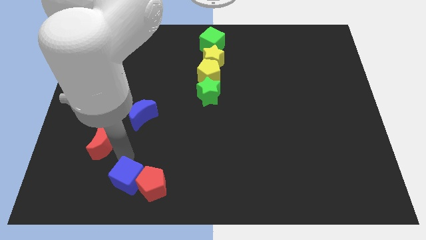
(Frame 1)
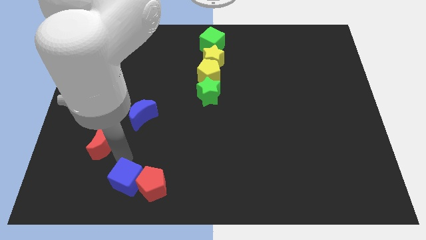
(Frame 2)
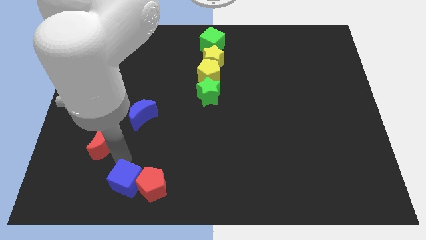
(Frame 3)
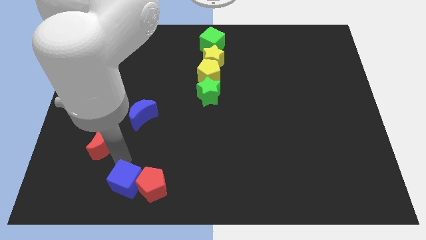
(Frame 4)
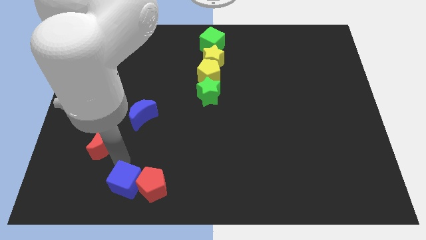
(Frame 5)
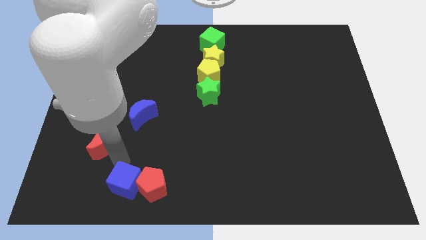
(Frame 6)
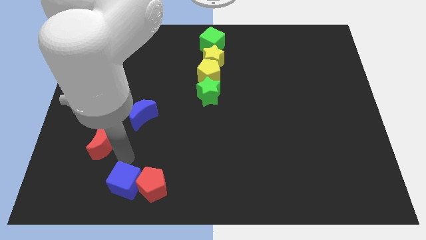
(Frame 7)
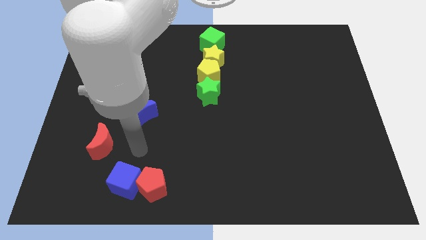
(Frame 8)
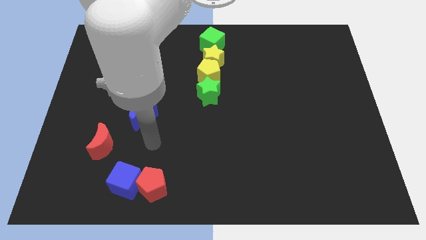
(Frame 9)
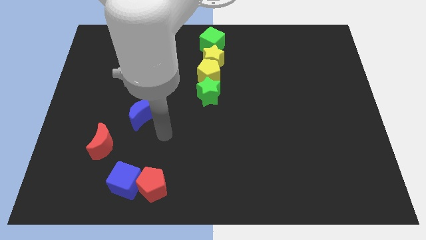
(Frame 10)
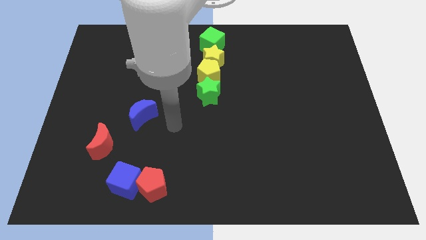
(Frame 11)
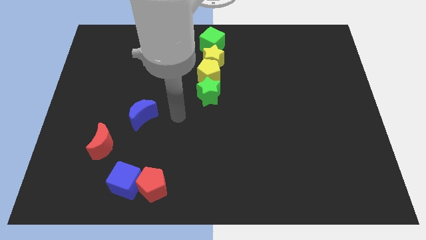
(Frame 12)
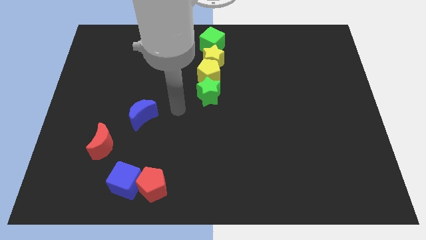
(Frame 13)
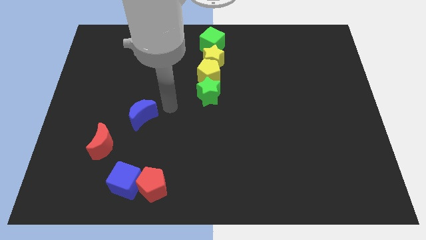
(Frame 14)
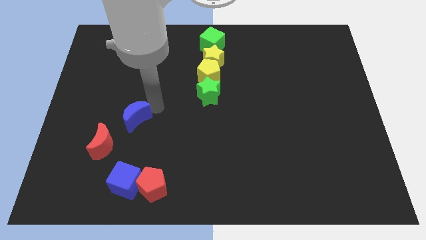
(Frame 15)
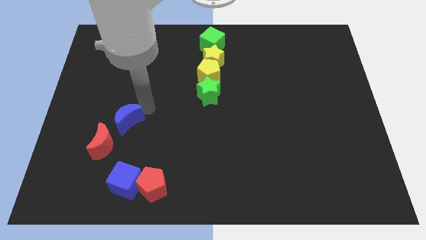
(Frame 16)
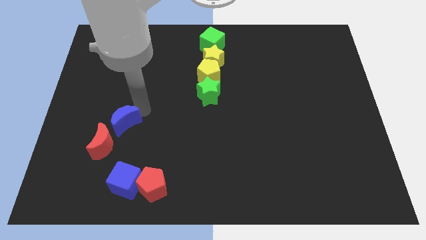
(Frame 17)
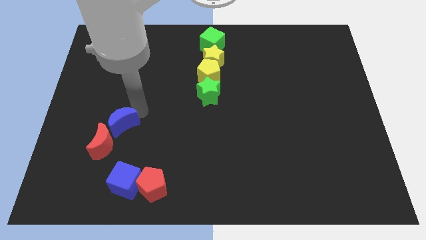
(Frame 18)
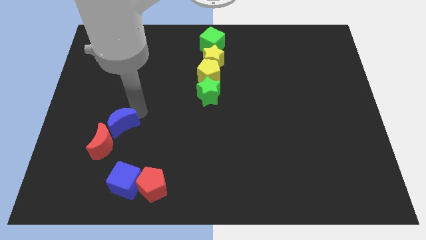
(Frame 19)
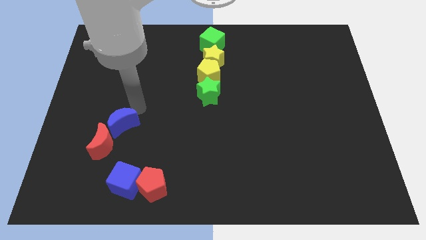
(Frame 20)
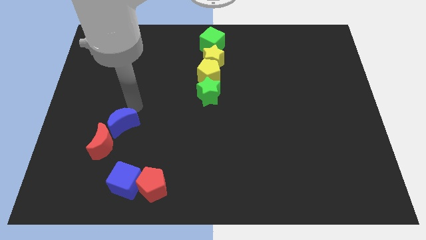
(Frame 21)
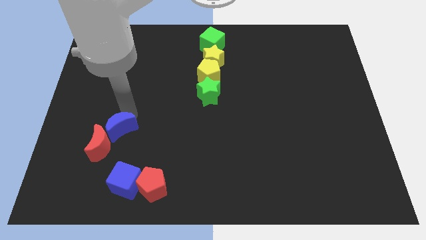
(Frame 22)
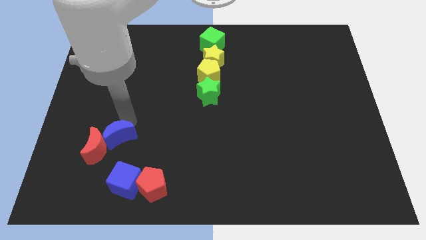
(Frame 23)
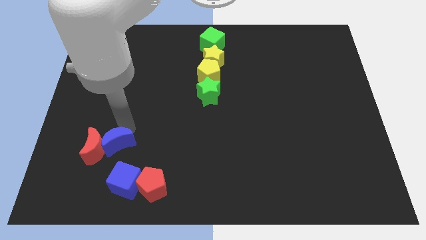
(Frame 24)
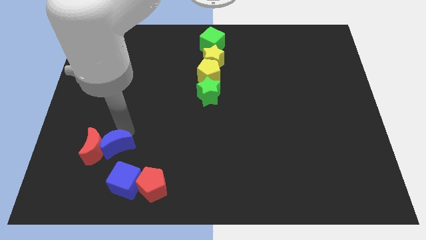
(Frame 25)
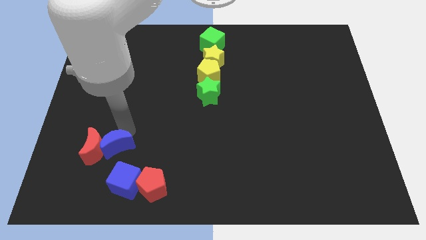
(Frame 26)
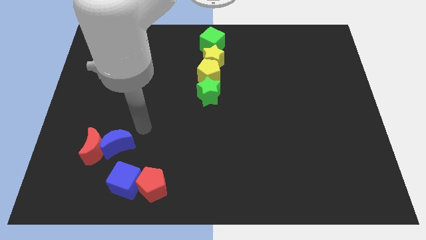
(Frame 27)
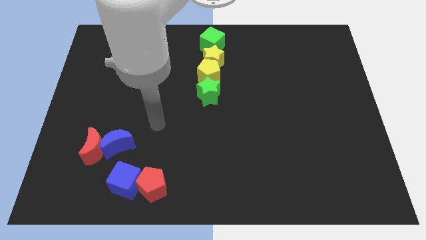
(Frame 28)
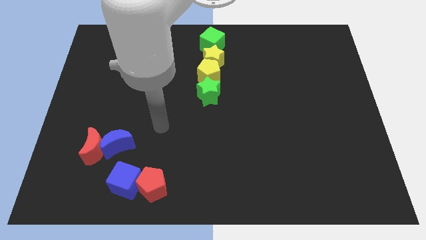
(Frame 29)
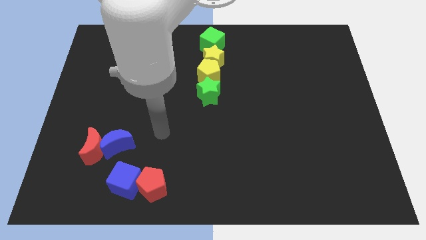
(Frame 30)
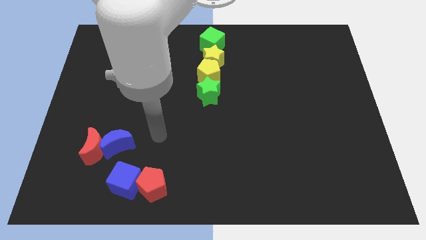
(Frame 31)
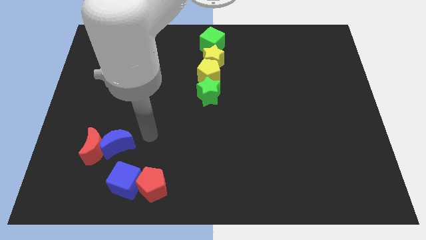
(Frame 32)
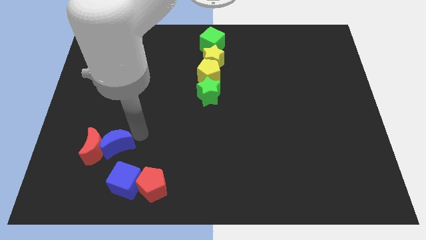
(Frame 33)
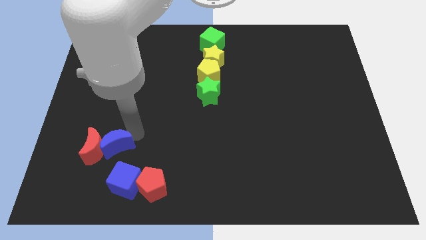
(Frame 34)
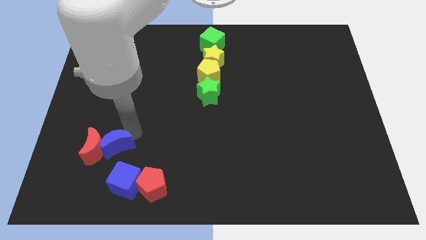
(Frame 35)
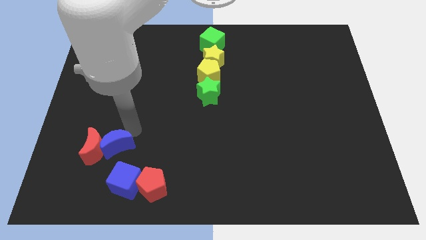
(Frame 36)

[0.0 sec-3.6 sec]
slightly move the blue cube and push the blue crescent close to the red crescent

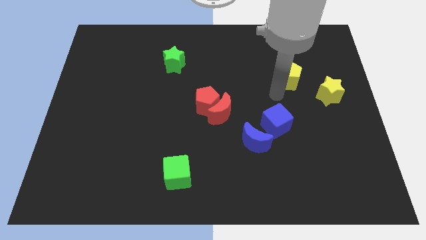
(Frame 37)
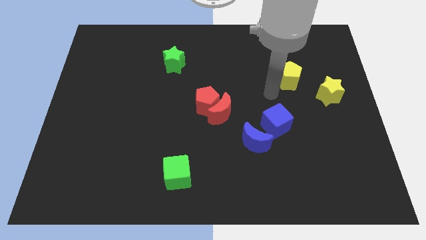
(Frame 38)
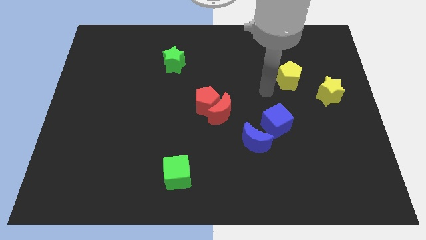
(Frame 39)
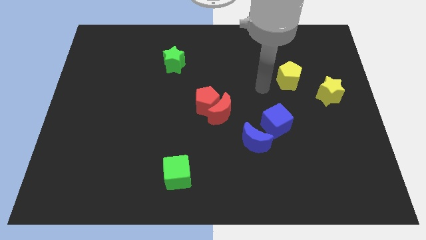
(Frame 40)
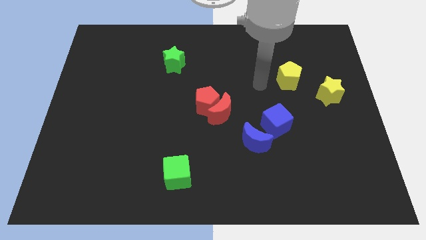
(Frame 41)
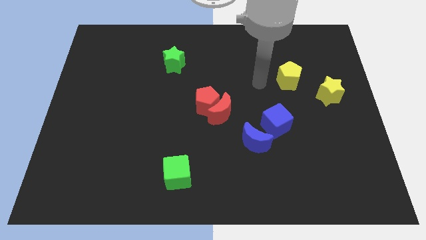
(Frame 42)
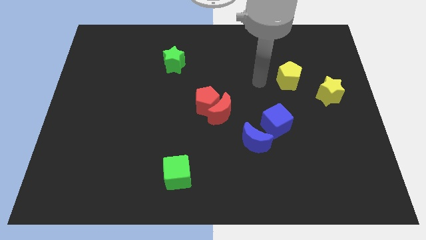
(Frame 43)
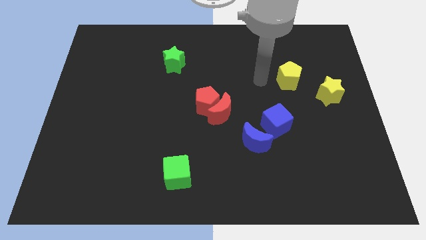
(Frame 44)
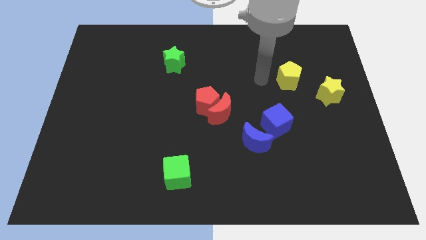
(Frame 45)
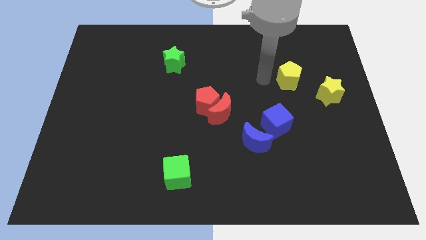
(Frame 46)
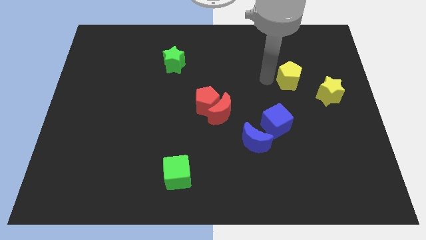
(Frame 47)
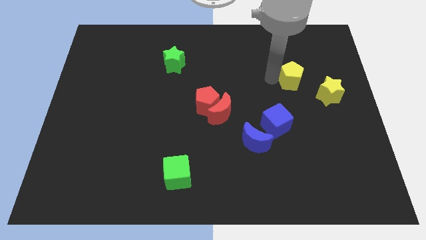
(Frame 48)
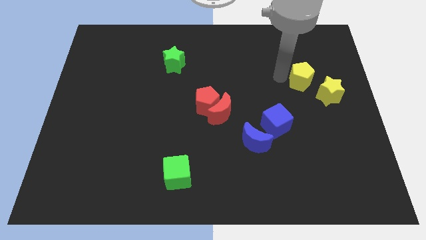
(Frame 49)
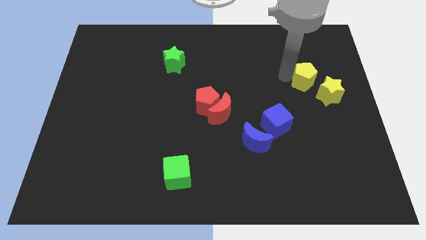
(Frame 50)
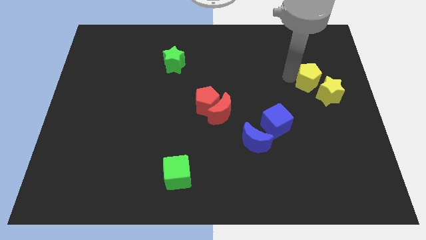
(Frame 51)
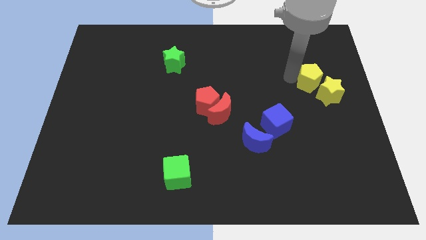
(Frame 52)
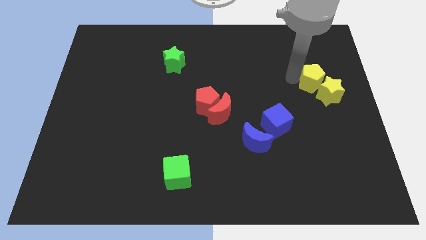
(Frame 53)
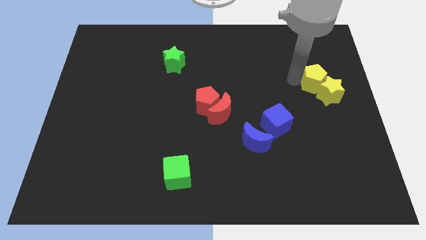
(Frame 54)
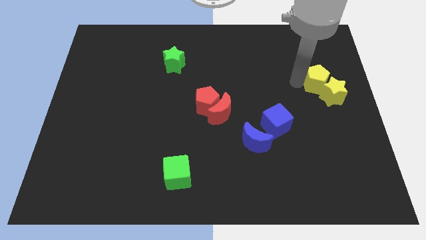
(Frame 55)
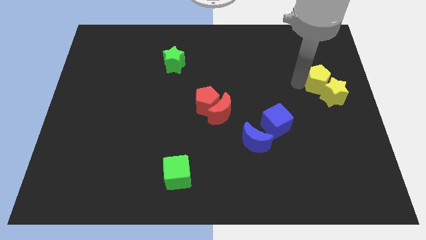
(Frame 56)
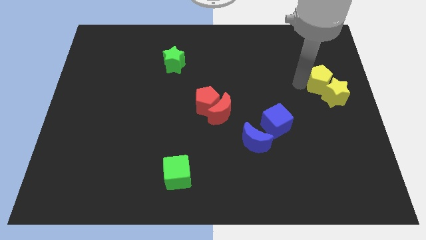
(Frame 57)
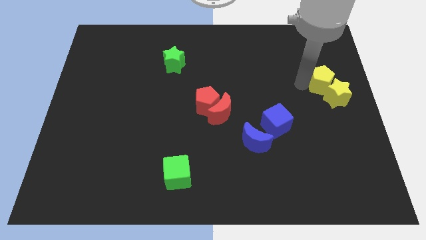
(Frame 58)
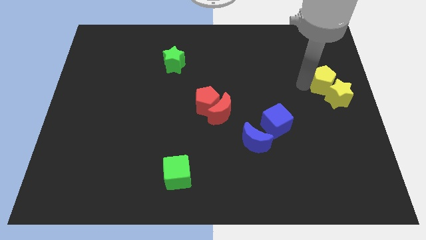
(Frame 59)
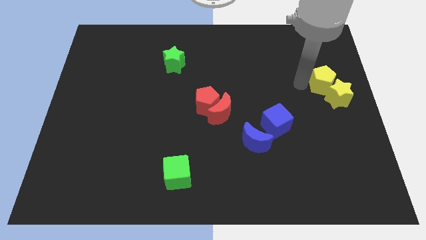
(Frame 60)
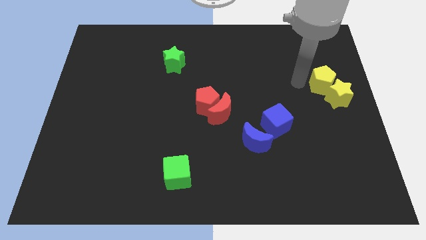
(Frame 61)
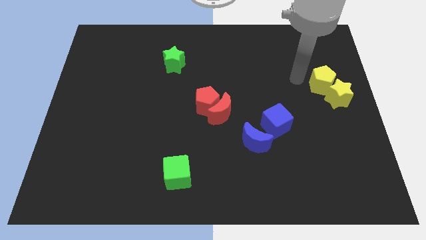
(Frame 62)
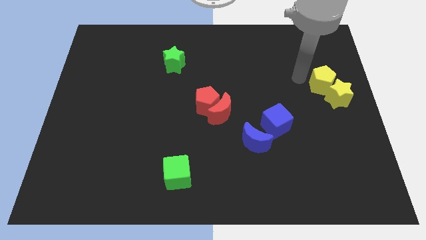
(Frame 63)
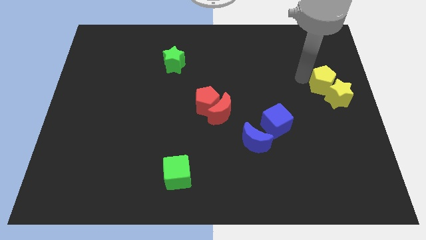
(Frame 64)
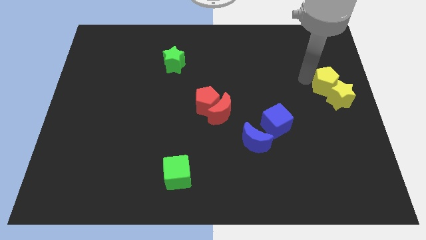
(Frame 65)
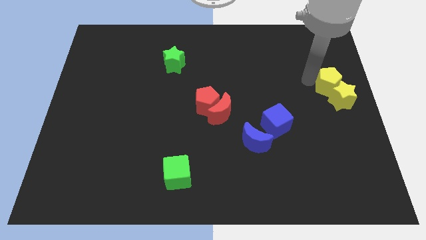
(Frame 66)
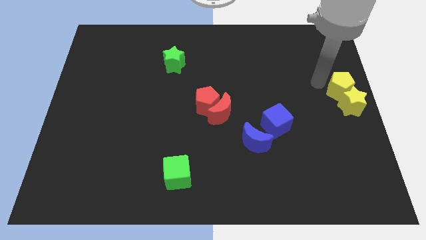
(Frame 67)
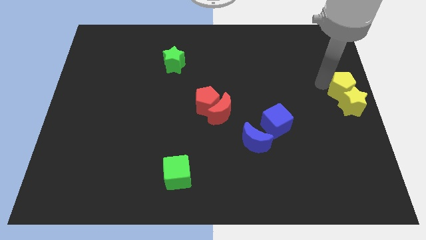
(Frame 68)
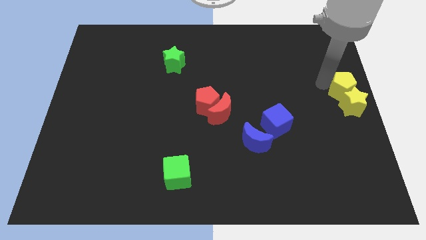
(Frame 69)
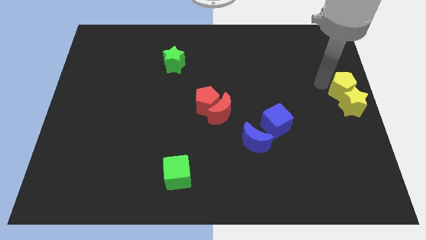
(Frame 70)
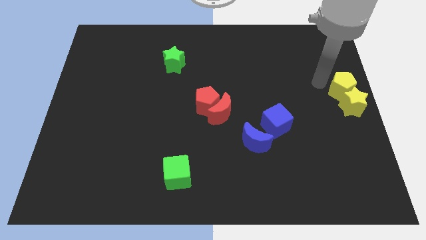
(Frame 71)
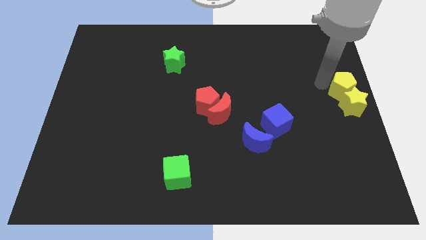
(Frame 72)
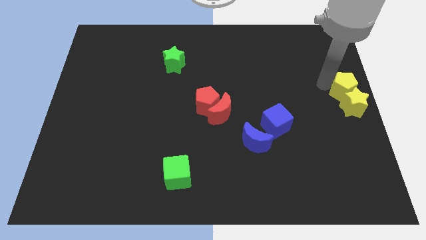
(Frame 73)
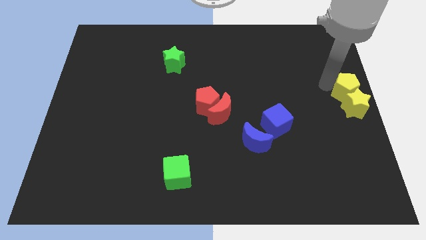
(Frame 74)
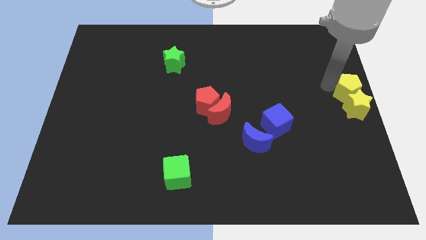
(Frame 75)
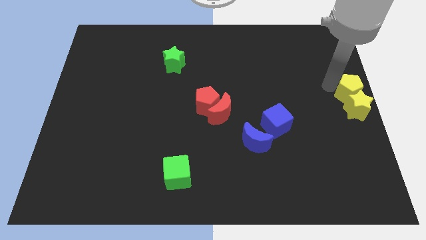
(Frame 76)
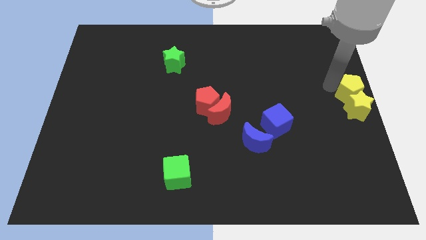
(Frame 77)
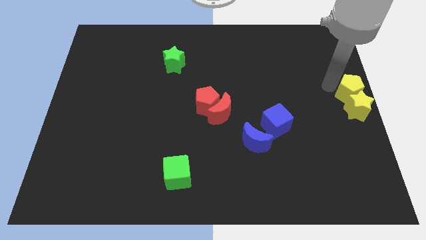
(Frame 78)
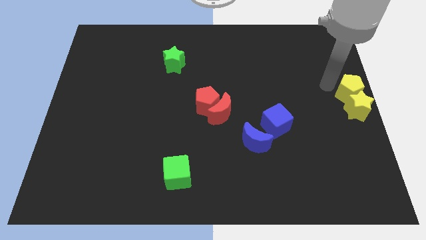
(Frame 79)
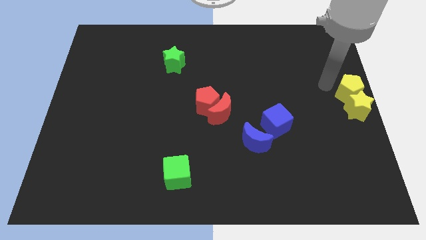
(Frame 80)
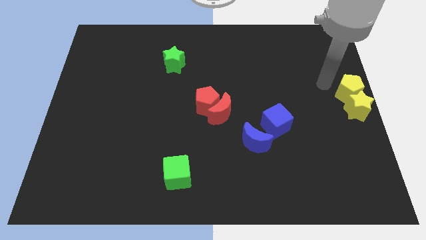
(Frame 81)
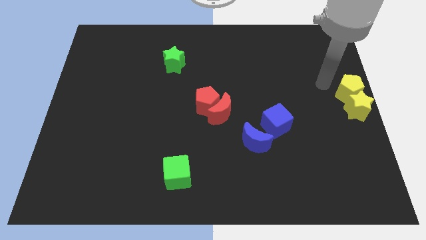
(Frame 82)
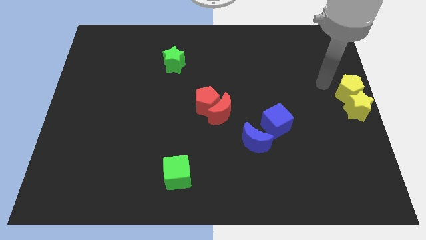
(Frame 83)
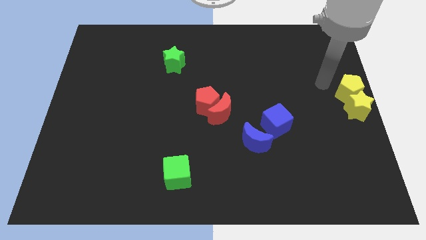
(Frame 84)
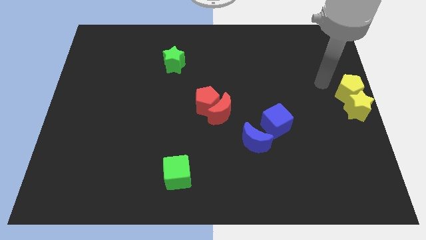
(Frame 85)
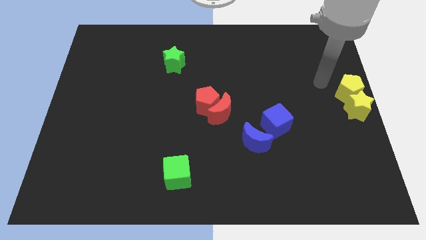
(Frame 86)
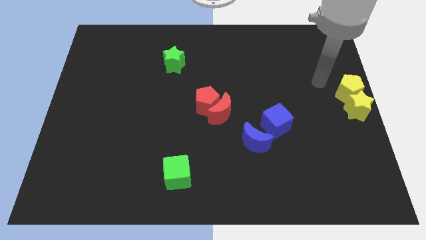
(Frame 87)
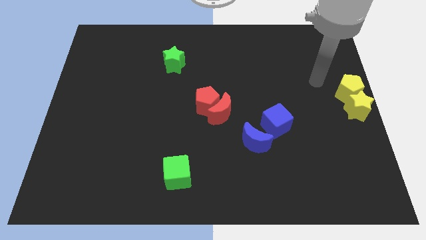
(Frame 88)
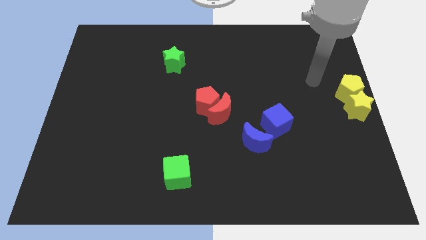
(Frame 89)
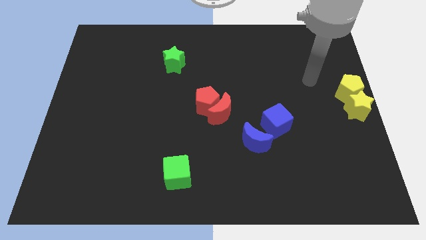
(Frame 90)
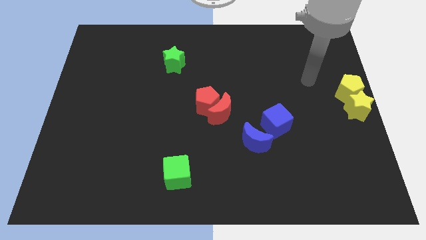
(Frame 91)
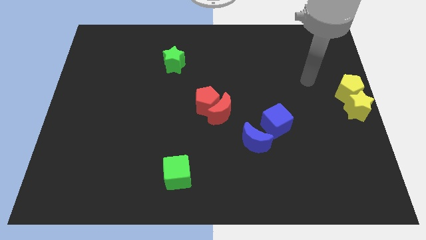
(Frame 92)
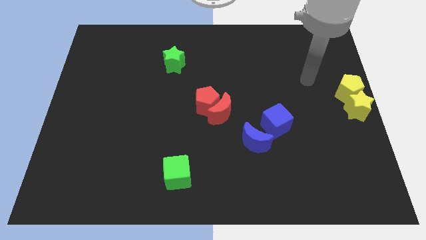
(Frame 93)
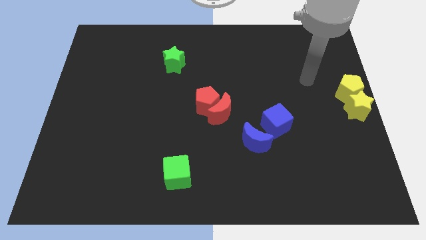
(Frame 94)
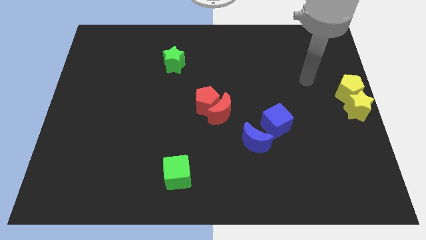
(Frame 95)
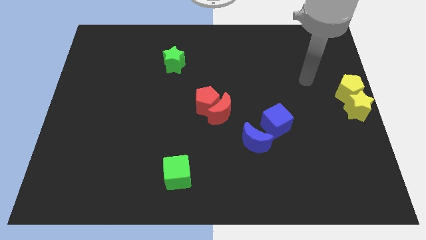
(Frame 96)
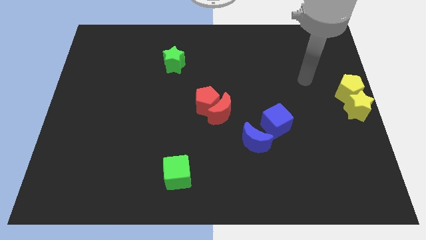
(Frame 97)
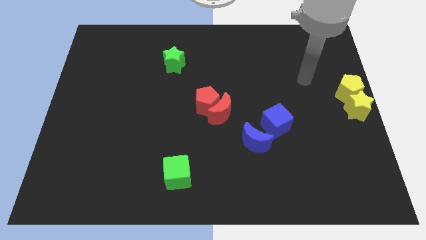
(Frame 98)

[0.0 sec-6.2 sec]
push the yellow pentagon into the yellow star to the right center
